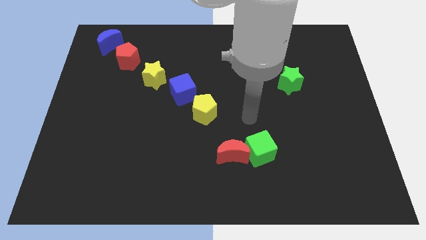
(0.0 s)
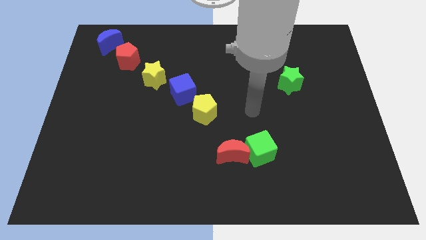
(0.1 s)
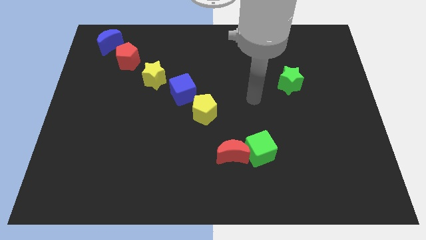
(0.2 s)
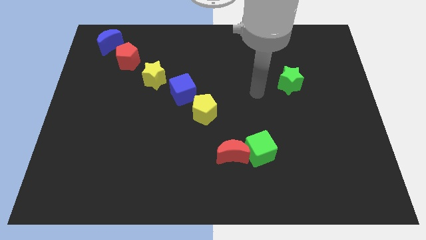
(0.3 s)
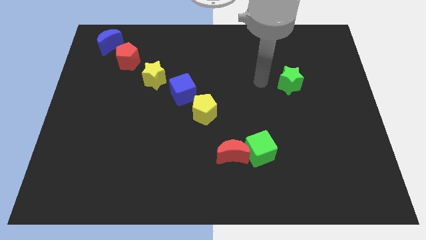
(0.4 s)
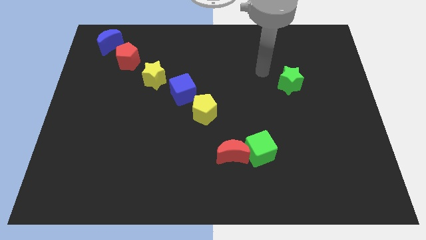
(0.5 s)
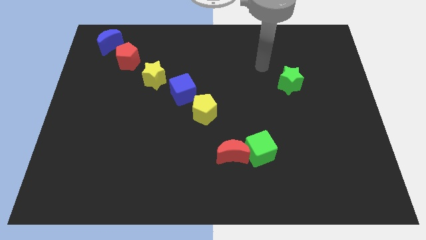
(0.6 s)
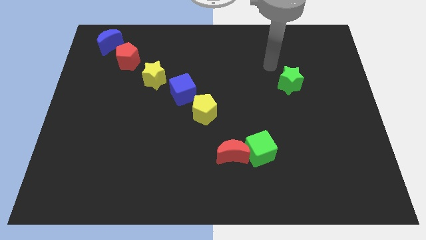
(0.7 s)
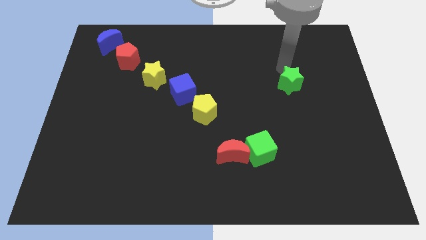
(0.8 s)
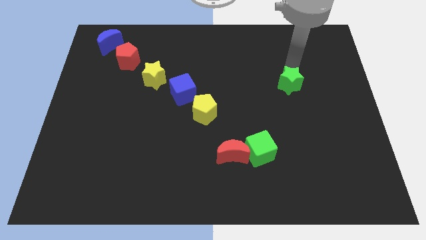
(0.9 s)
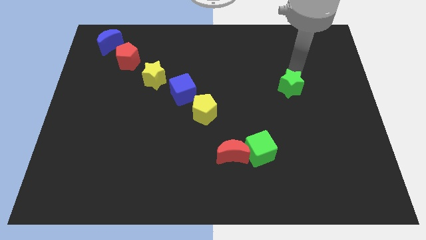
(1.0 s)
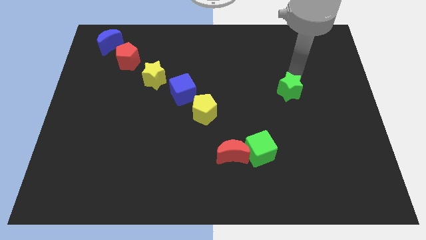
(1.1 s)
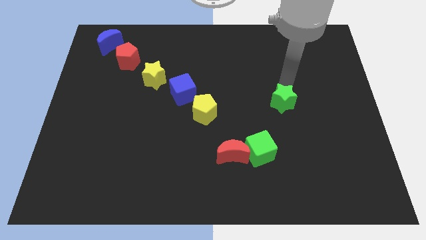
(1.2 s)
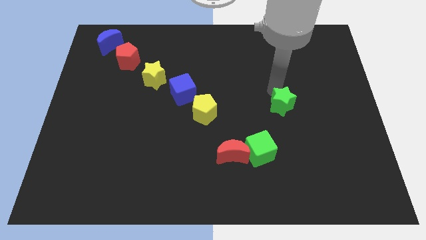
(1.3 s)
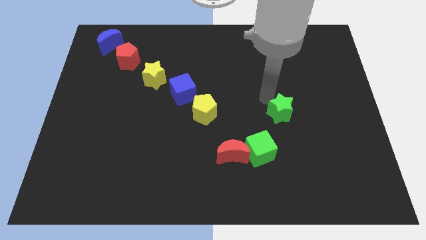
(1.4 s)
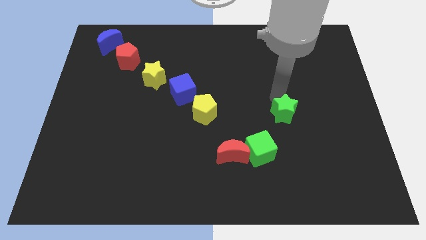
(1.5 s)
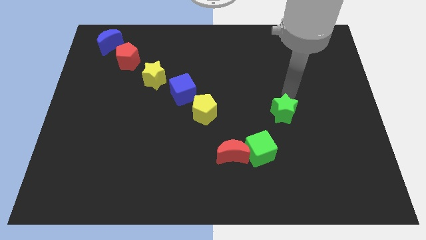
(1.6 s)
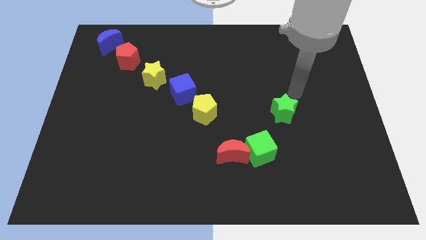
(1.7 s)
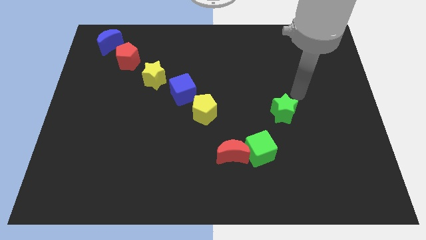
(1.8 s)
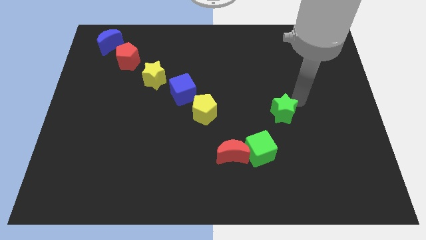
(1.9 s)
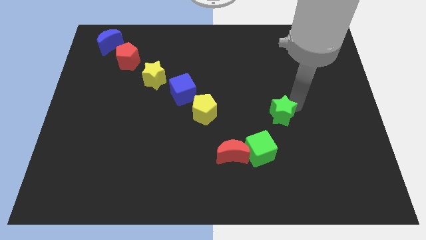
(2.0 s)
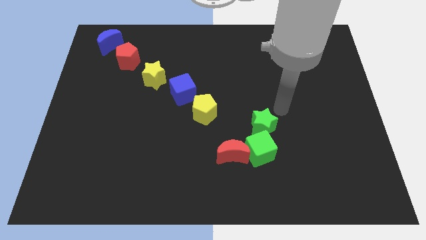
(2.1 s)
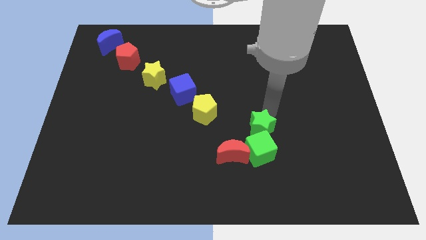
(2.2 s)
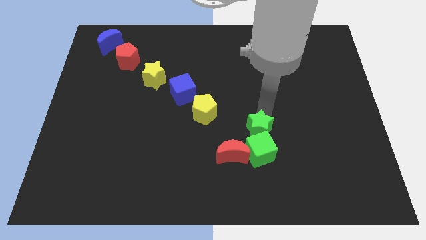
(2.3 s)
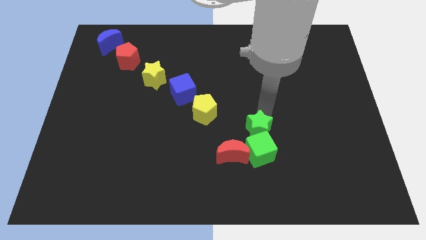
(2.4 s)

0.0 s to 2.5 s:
push the green star into green cube

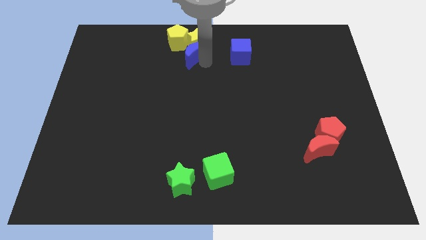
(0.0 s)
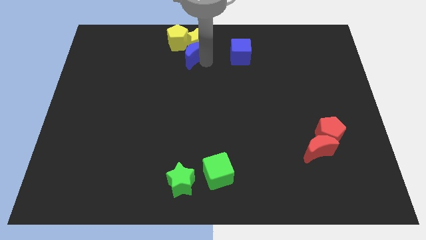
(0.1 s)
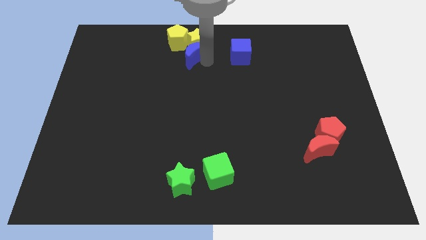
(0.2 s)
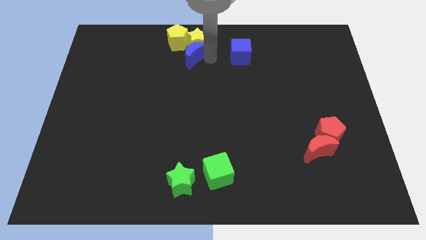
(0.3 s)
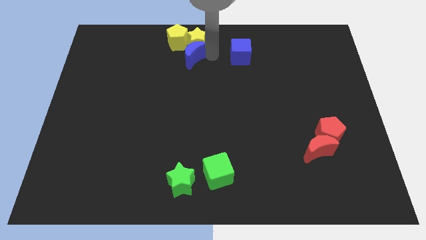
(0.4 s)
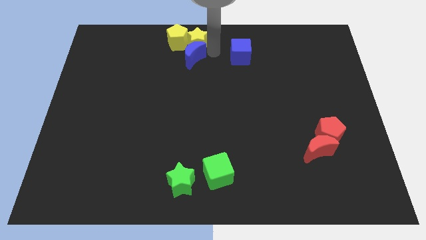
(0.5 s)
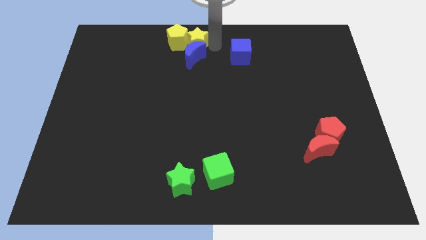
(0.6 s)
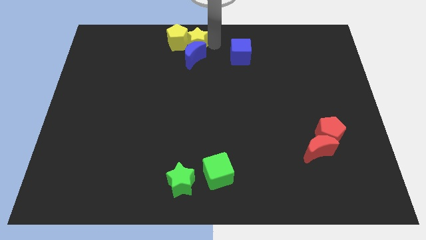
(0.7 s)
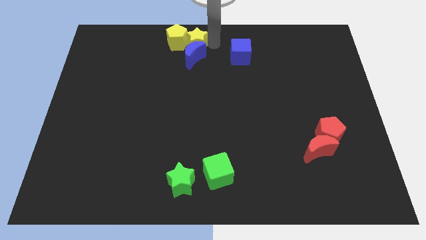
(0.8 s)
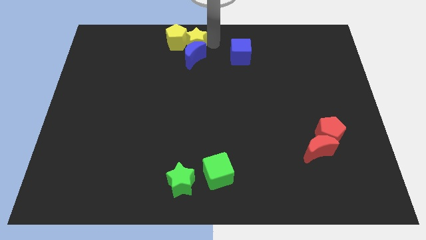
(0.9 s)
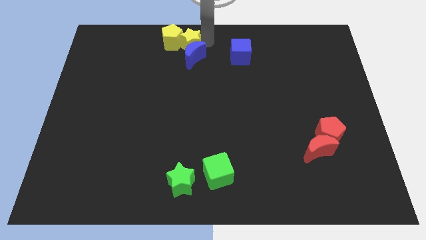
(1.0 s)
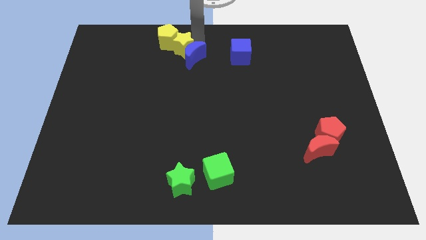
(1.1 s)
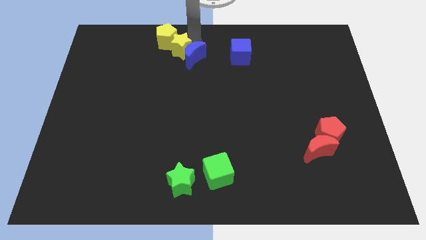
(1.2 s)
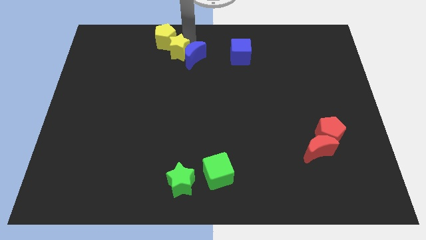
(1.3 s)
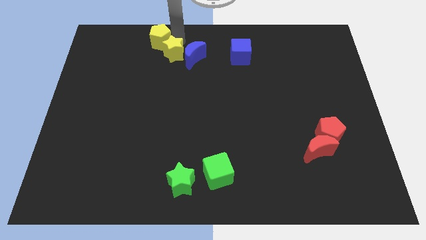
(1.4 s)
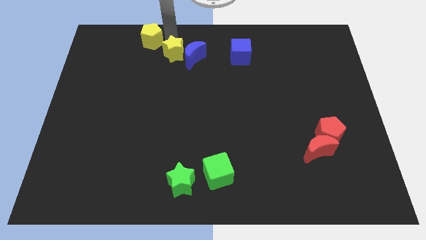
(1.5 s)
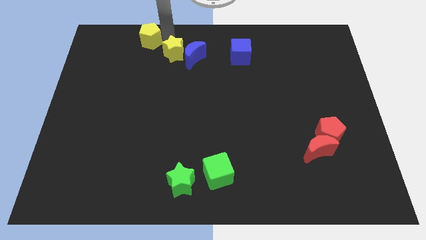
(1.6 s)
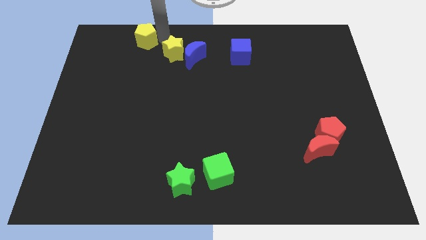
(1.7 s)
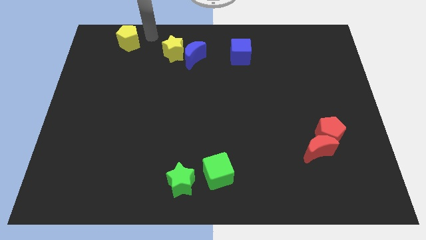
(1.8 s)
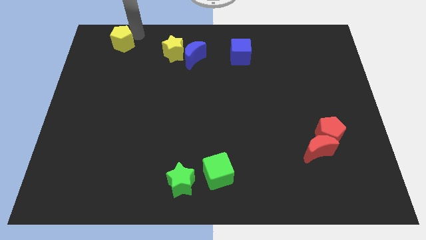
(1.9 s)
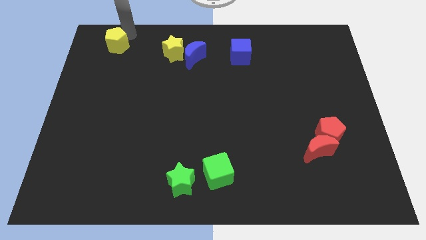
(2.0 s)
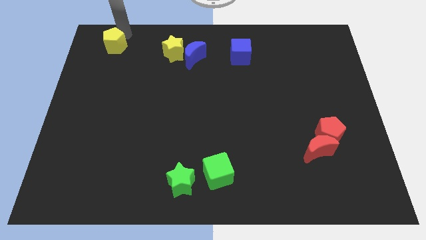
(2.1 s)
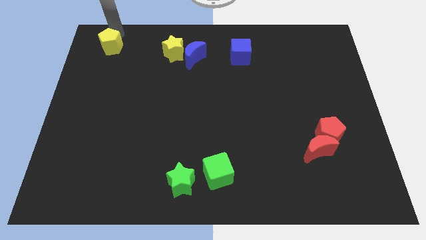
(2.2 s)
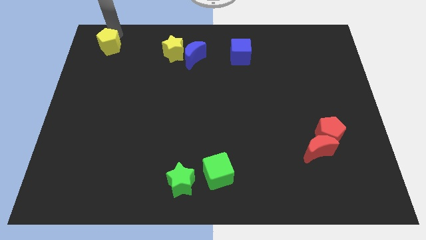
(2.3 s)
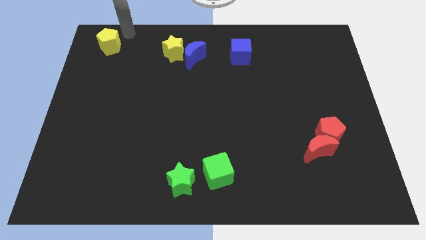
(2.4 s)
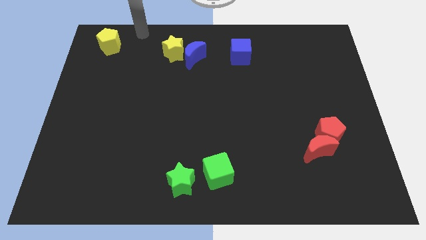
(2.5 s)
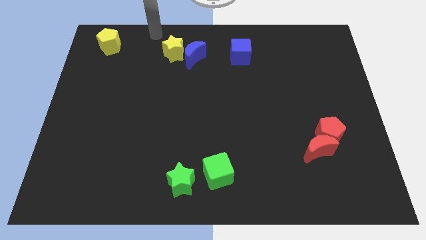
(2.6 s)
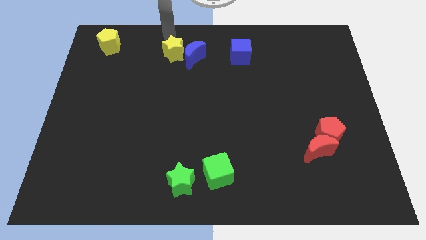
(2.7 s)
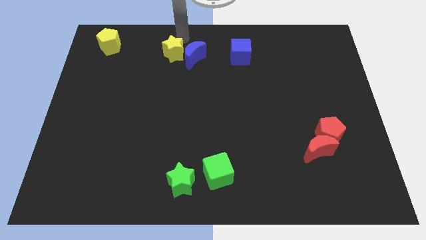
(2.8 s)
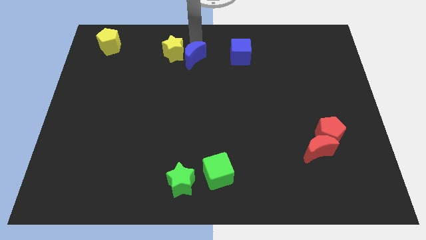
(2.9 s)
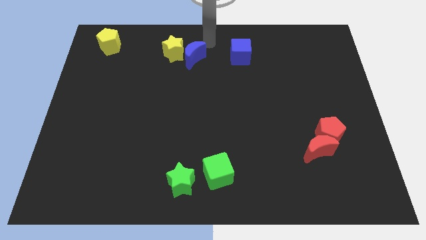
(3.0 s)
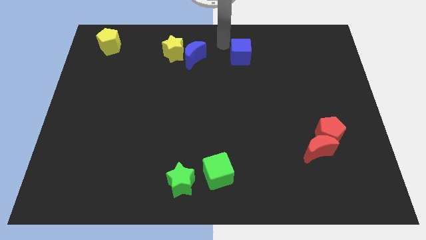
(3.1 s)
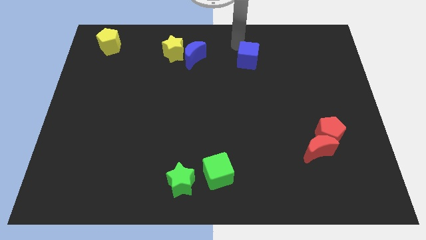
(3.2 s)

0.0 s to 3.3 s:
separate yellow pentagon from yellow star

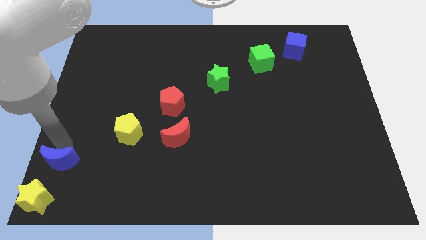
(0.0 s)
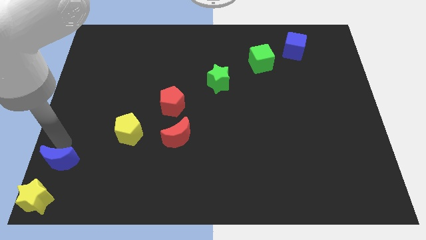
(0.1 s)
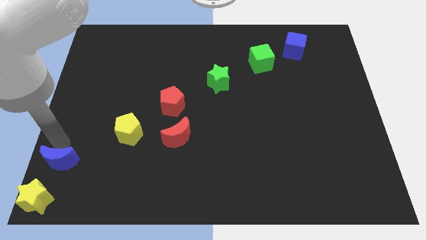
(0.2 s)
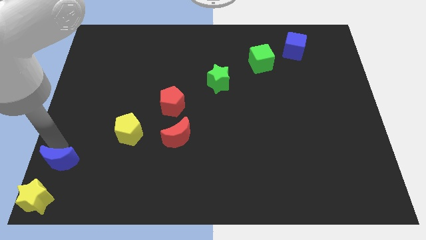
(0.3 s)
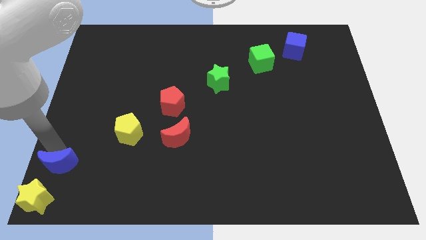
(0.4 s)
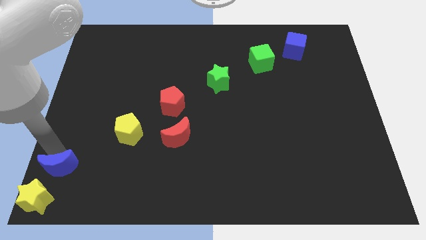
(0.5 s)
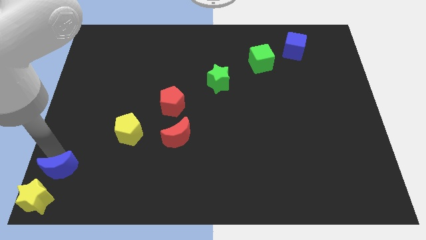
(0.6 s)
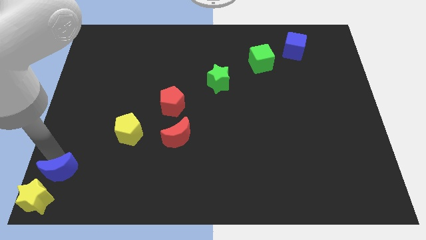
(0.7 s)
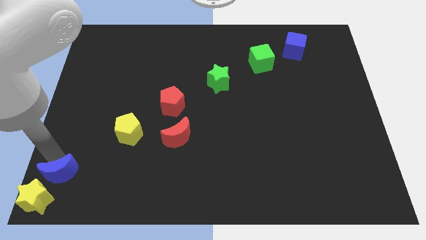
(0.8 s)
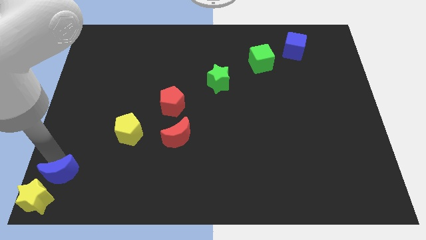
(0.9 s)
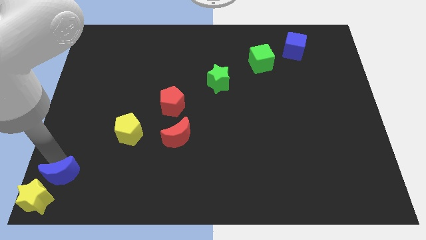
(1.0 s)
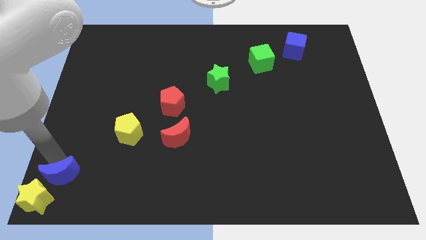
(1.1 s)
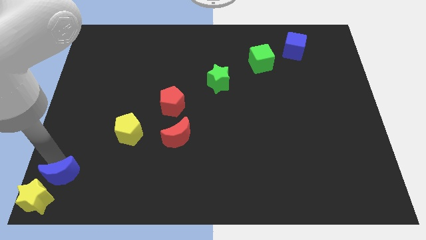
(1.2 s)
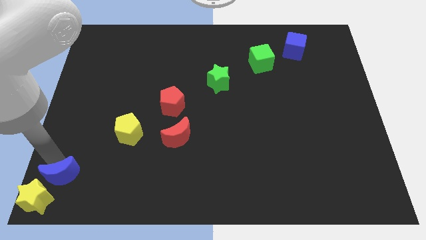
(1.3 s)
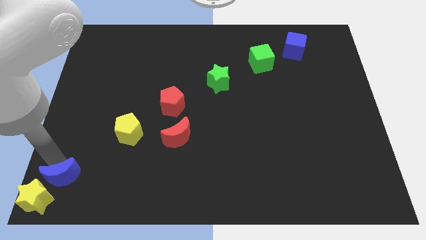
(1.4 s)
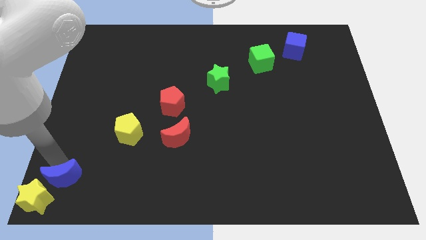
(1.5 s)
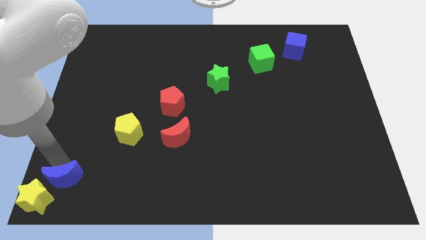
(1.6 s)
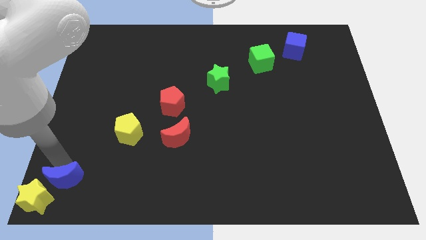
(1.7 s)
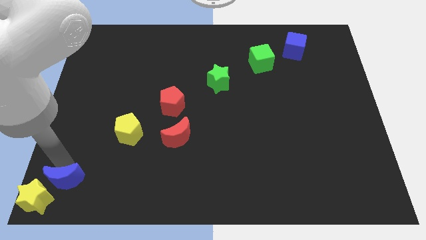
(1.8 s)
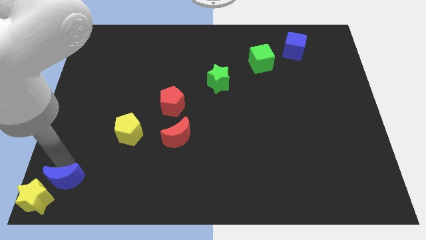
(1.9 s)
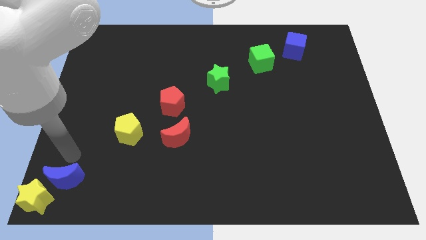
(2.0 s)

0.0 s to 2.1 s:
push blue moon towards bottom left

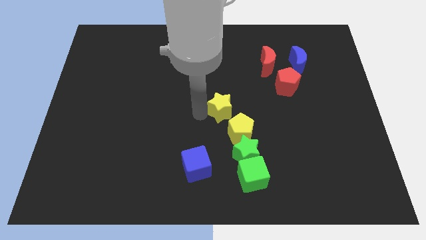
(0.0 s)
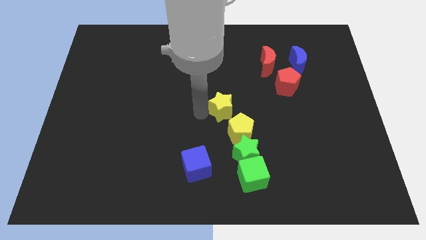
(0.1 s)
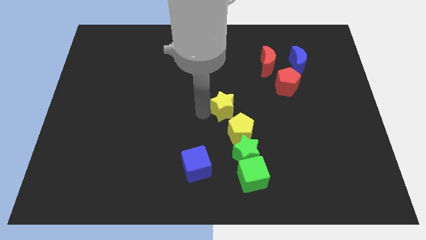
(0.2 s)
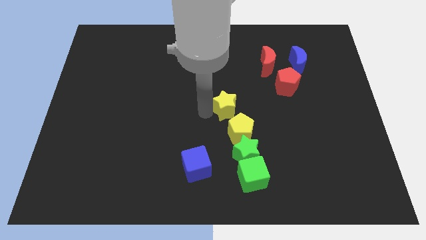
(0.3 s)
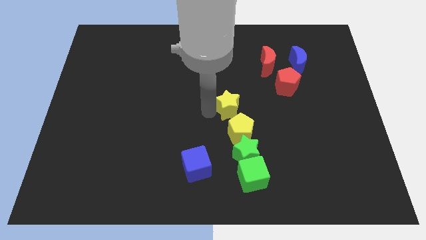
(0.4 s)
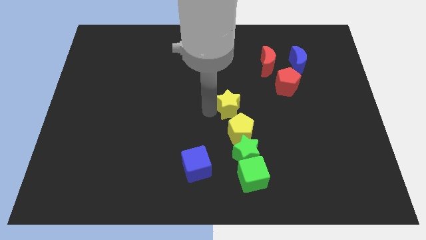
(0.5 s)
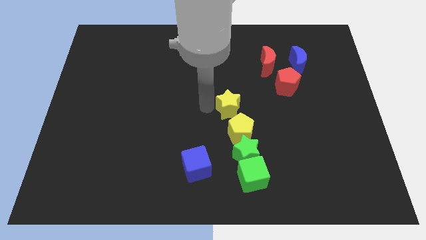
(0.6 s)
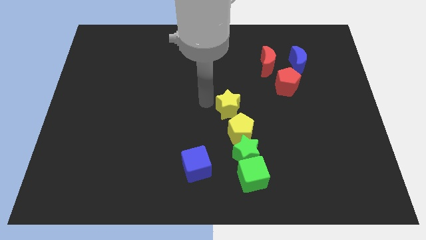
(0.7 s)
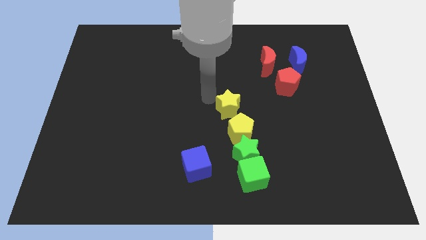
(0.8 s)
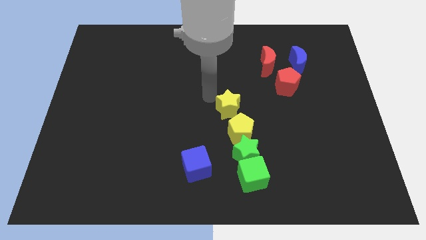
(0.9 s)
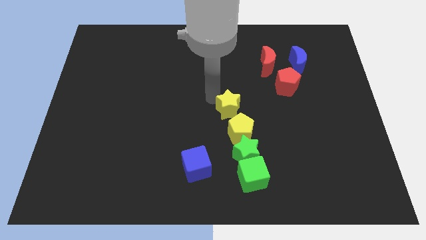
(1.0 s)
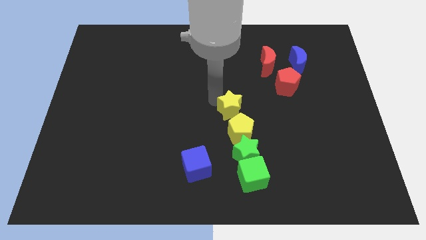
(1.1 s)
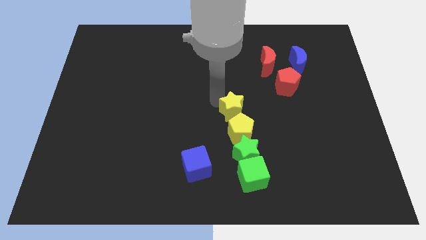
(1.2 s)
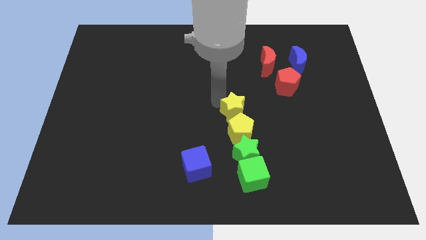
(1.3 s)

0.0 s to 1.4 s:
push yellow star into the yellow pentagon
